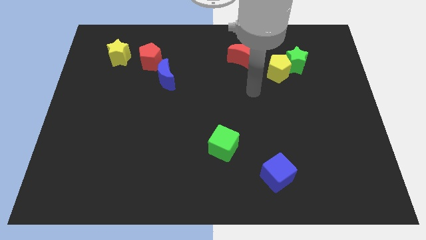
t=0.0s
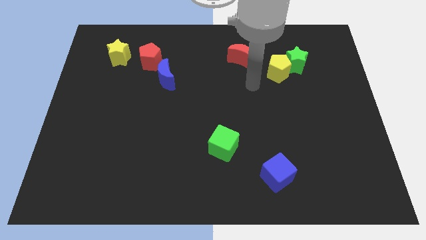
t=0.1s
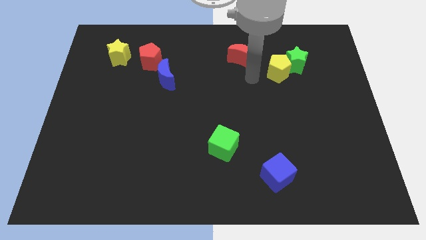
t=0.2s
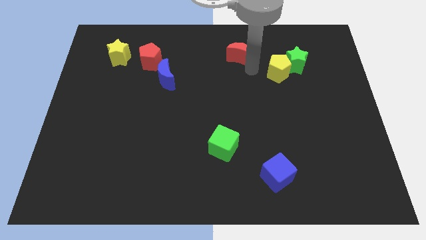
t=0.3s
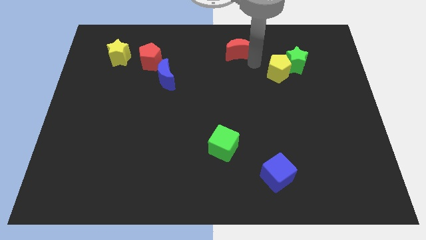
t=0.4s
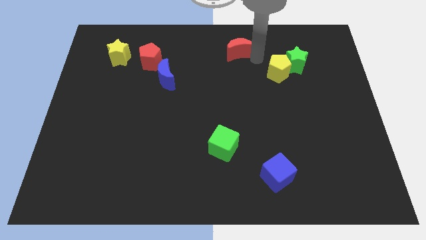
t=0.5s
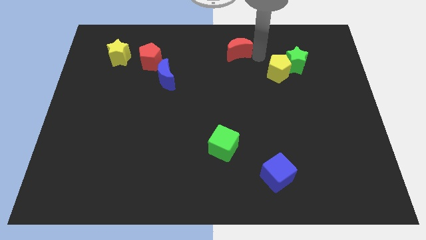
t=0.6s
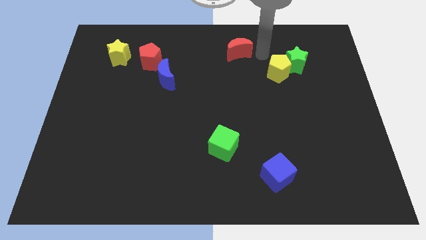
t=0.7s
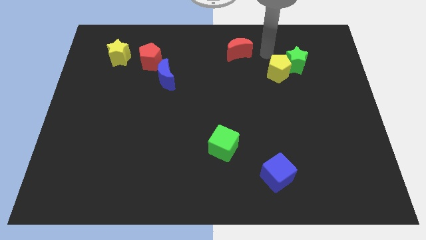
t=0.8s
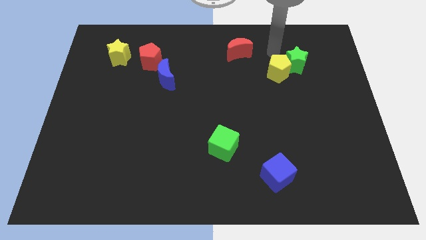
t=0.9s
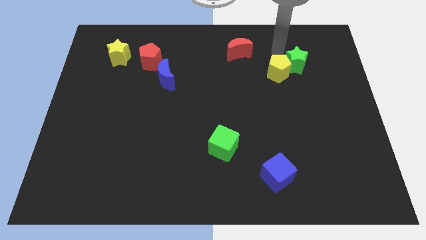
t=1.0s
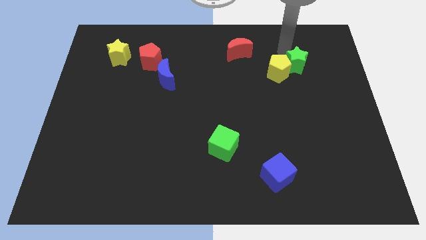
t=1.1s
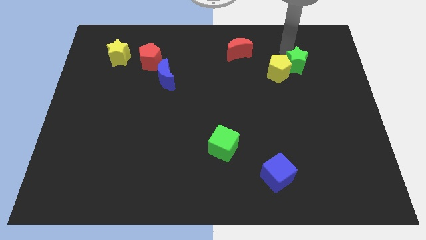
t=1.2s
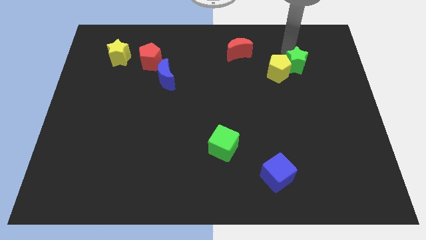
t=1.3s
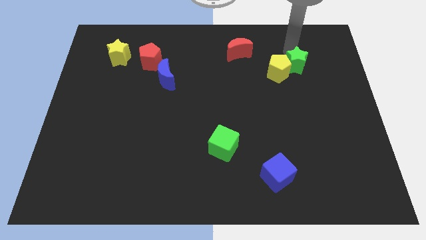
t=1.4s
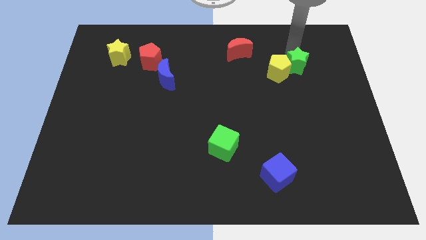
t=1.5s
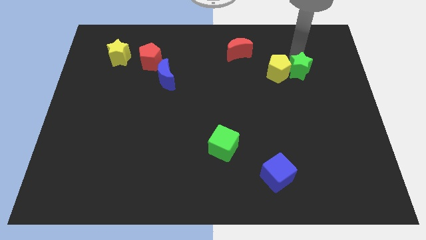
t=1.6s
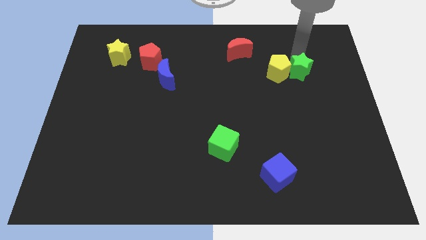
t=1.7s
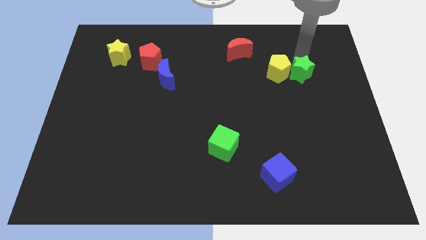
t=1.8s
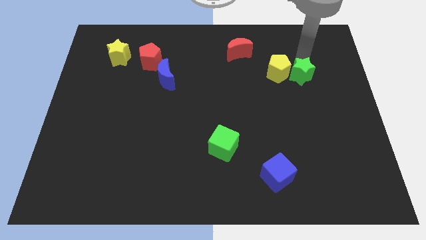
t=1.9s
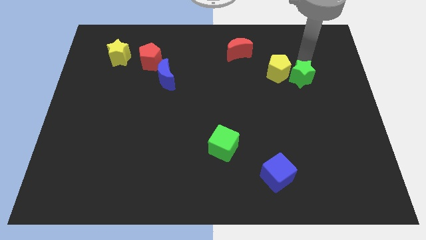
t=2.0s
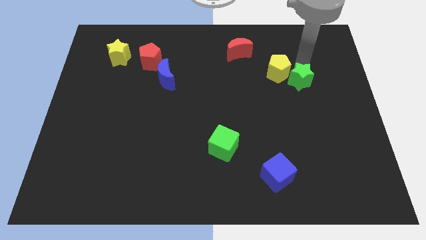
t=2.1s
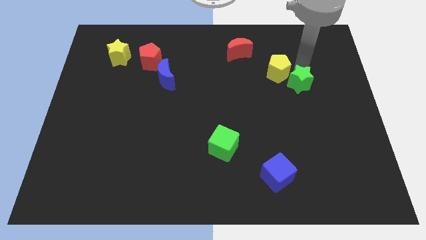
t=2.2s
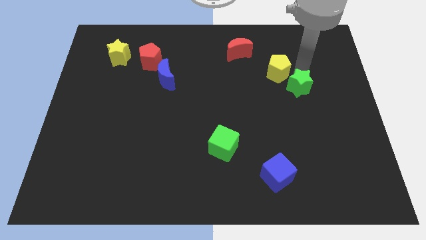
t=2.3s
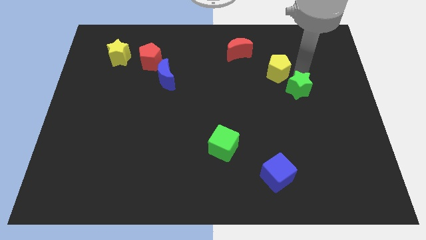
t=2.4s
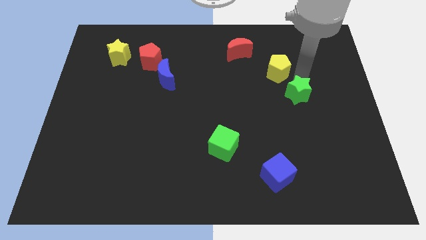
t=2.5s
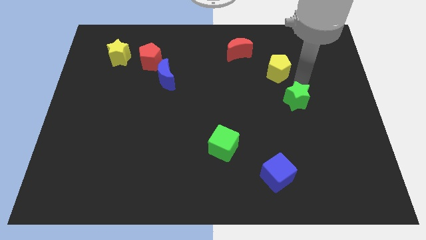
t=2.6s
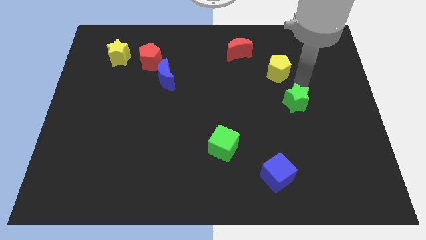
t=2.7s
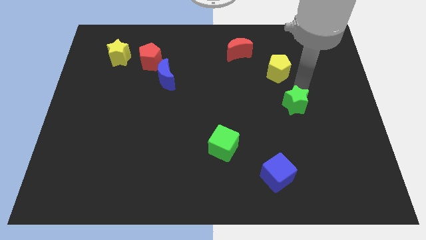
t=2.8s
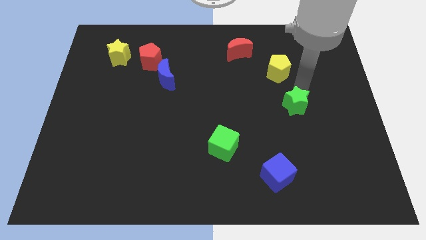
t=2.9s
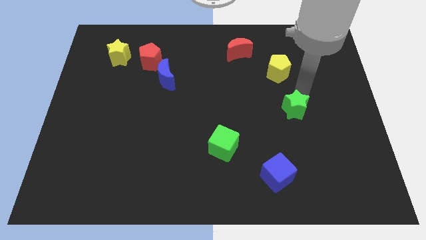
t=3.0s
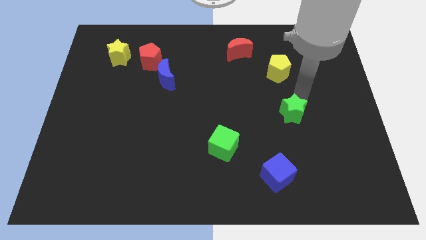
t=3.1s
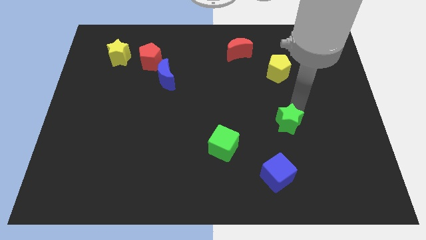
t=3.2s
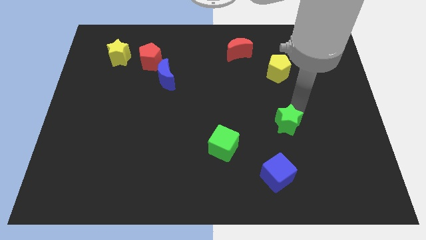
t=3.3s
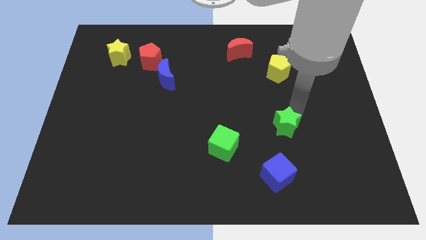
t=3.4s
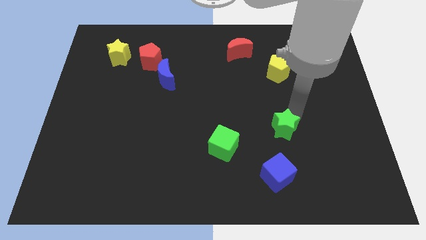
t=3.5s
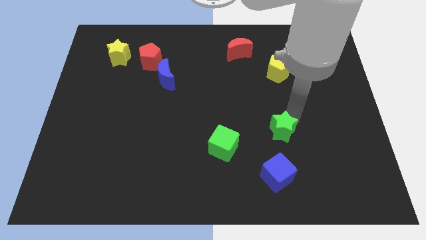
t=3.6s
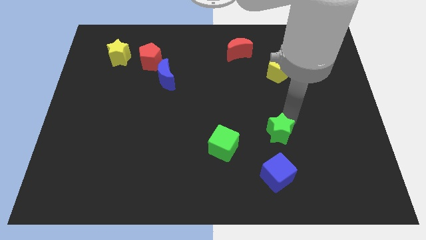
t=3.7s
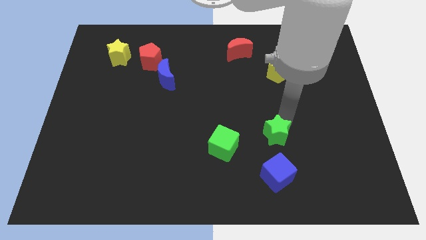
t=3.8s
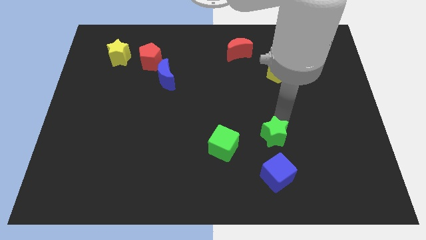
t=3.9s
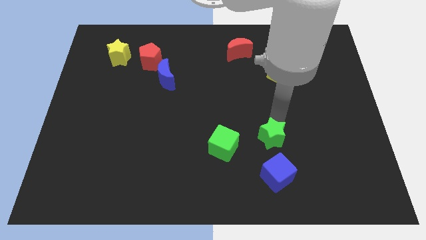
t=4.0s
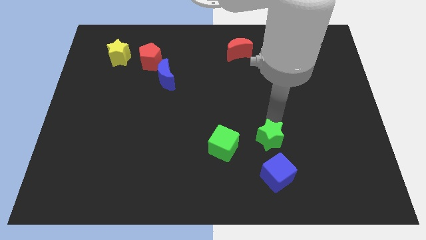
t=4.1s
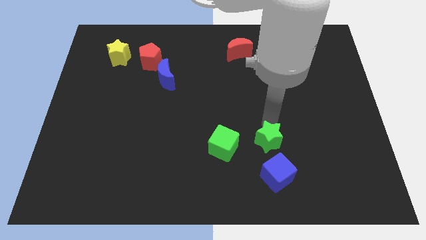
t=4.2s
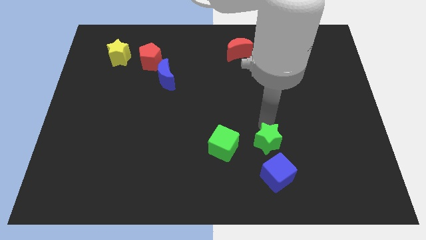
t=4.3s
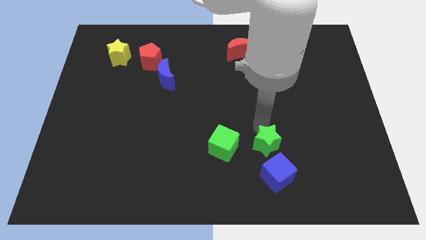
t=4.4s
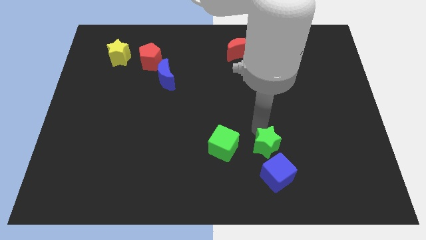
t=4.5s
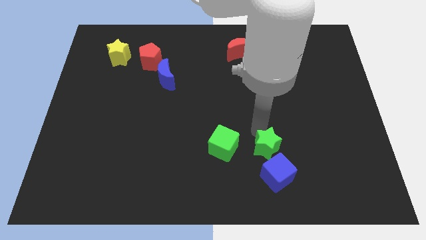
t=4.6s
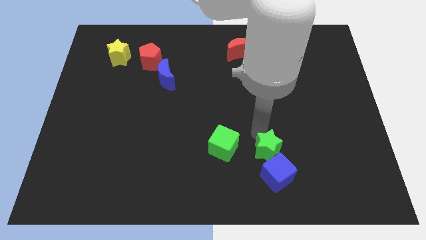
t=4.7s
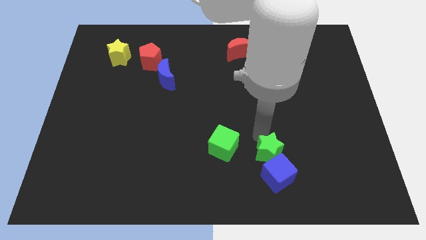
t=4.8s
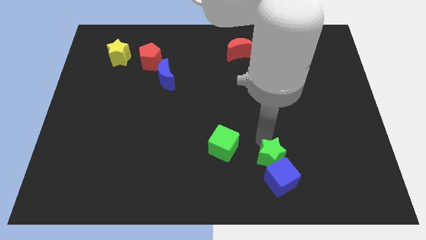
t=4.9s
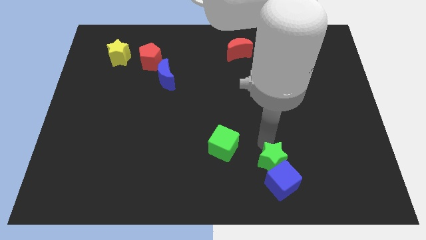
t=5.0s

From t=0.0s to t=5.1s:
put the green star to the blue cube

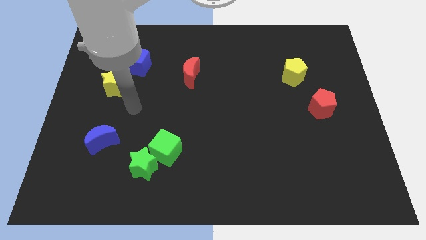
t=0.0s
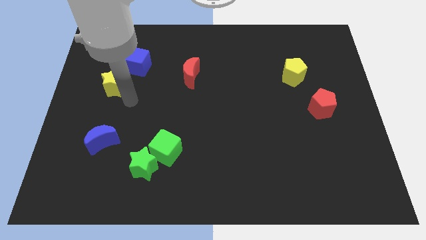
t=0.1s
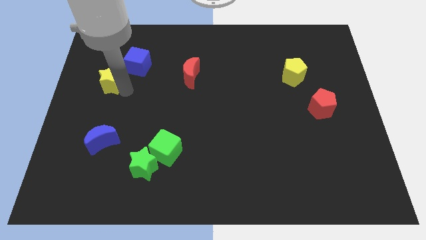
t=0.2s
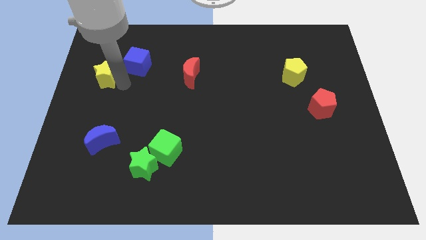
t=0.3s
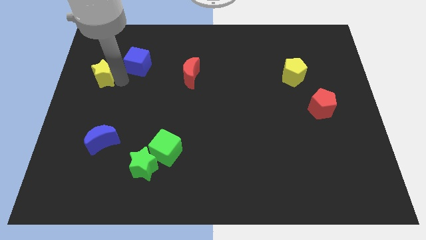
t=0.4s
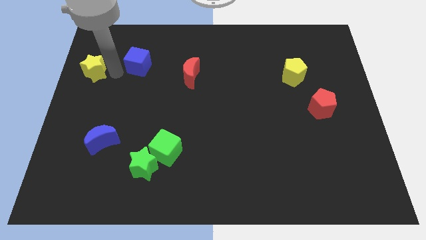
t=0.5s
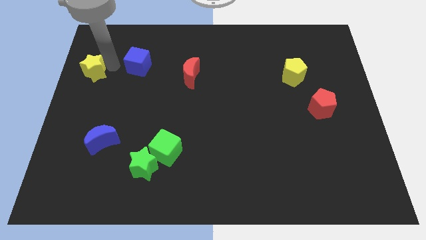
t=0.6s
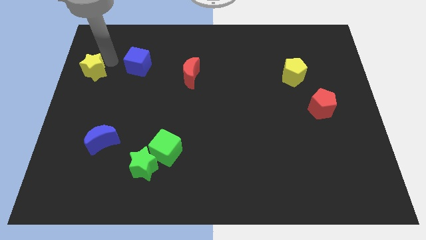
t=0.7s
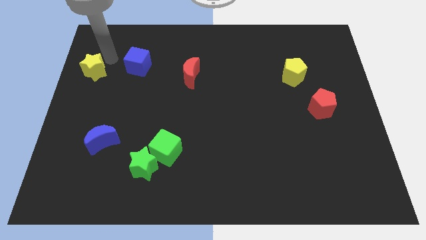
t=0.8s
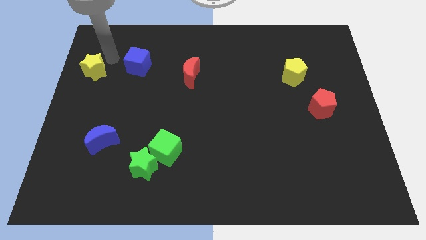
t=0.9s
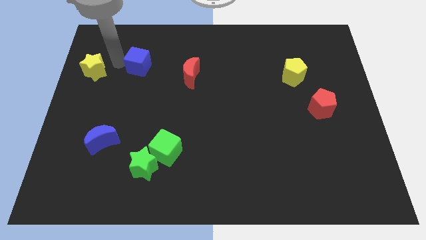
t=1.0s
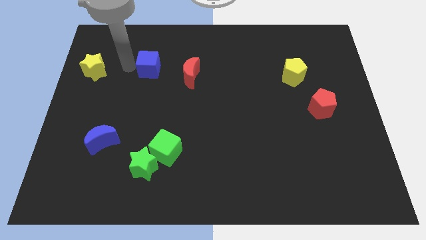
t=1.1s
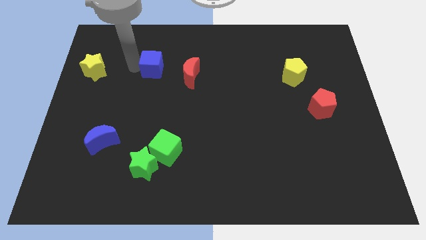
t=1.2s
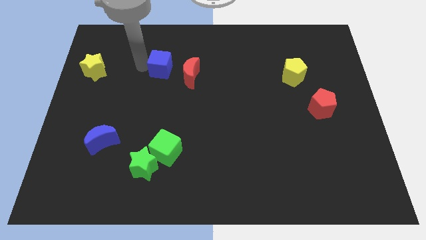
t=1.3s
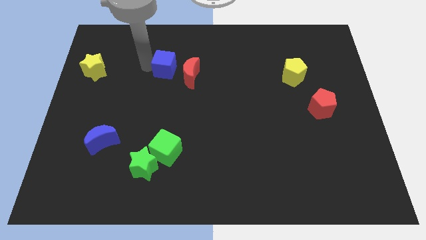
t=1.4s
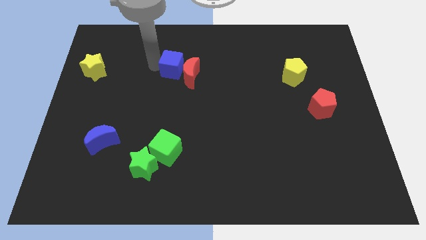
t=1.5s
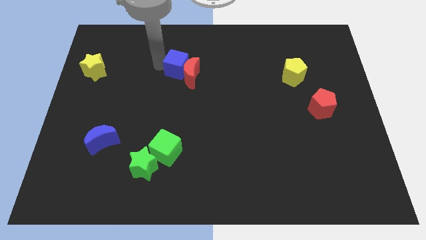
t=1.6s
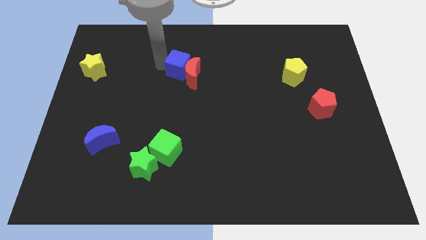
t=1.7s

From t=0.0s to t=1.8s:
move the blue cube to the red moon

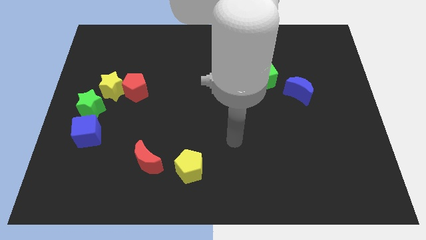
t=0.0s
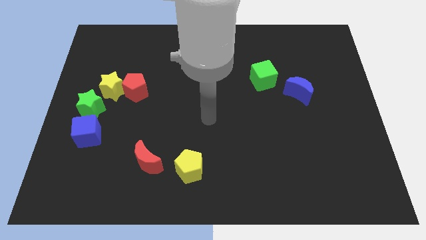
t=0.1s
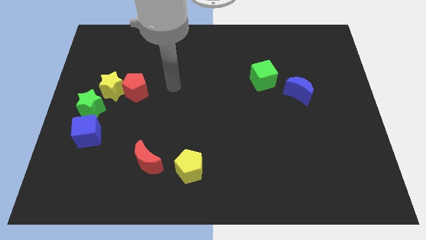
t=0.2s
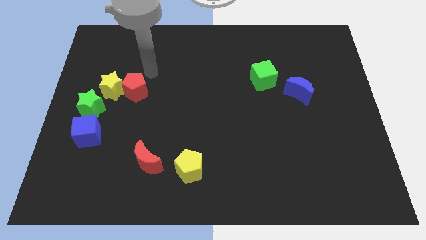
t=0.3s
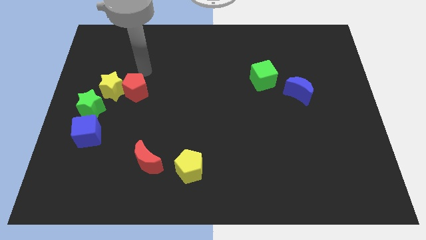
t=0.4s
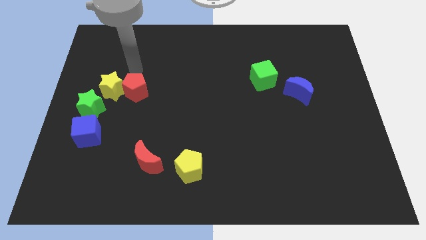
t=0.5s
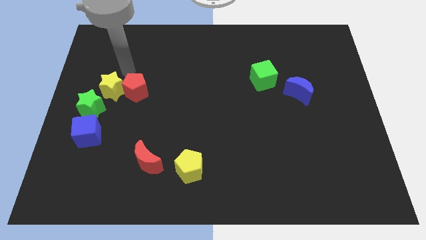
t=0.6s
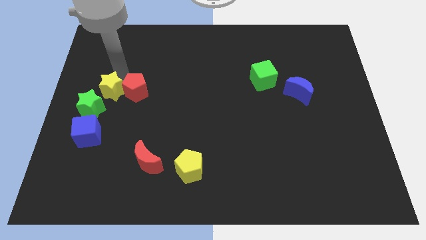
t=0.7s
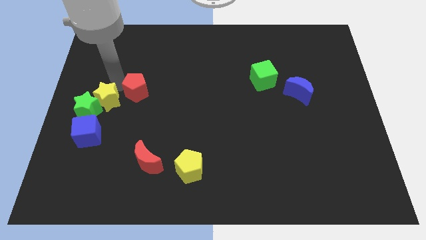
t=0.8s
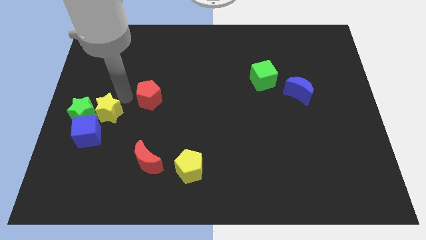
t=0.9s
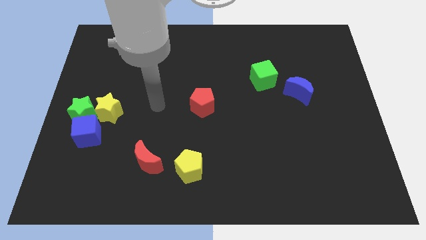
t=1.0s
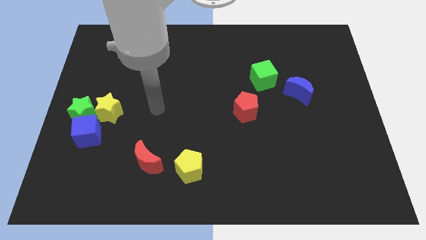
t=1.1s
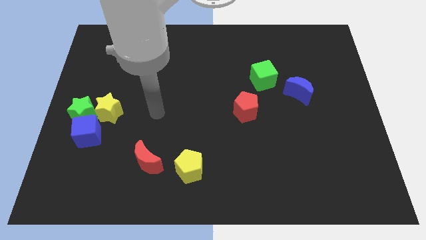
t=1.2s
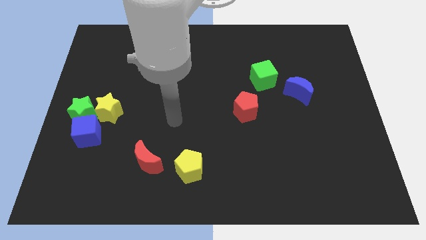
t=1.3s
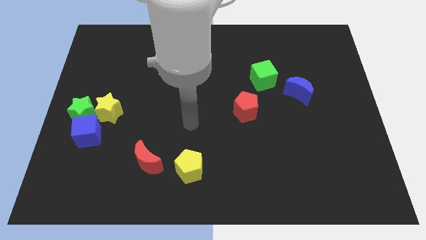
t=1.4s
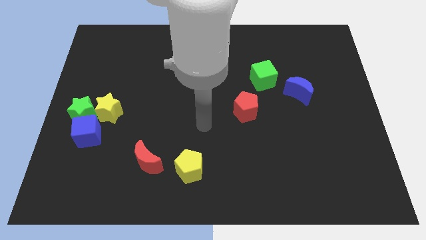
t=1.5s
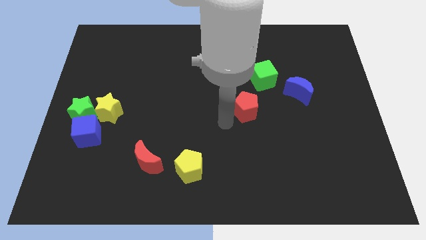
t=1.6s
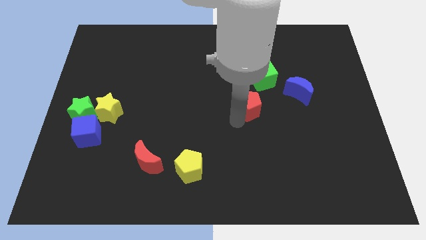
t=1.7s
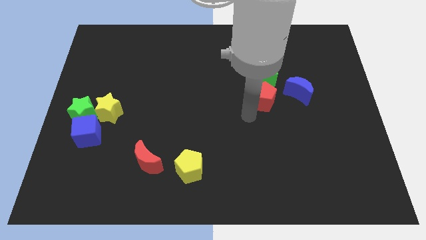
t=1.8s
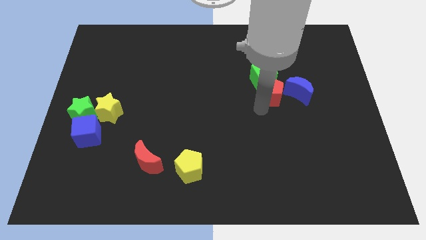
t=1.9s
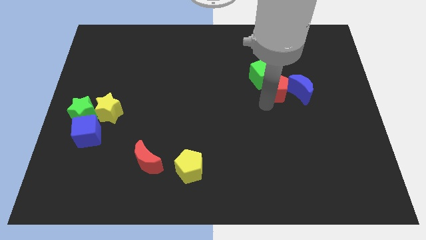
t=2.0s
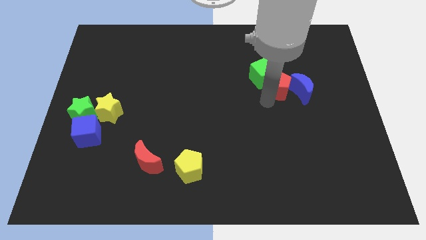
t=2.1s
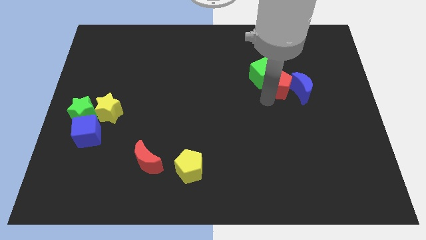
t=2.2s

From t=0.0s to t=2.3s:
put the red pentagon next to the blue moon
